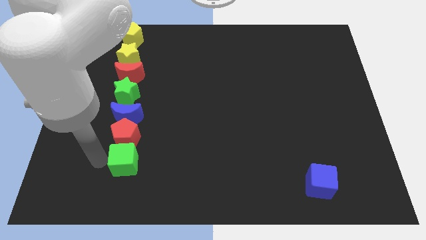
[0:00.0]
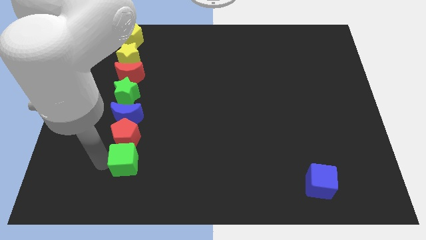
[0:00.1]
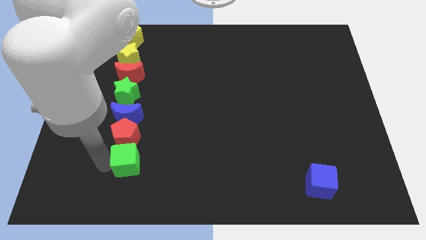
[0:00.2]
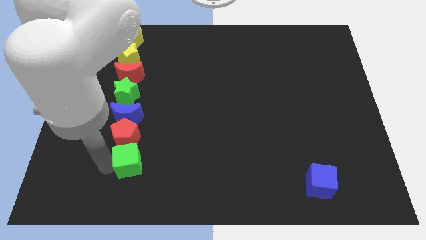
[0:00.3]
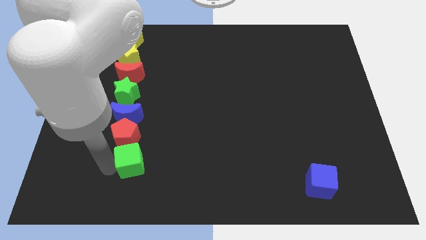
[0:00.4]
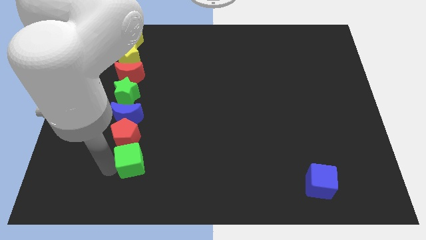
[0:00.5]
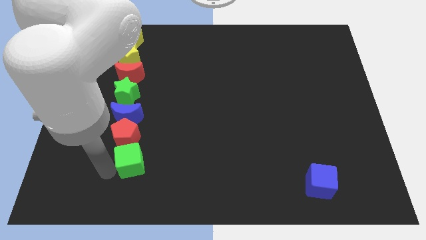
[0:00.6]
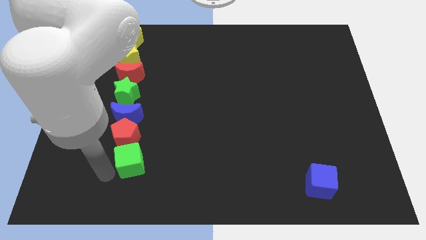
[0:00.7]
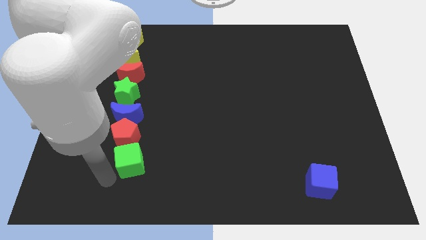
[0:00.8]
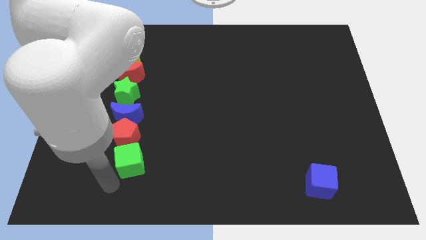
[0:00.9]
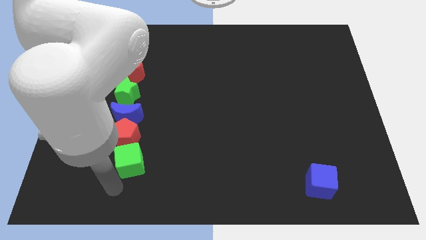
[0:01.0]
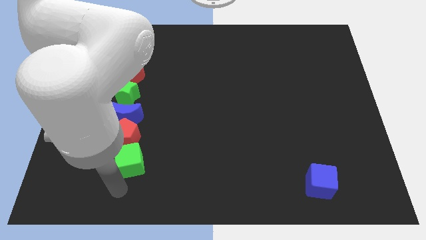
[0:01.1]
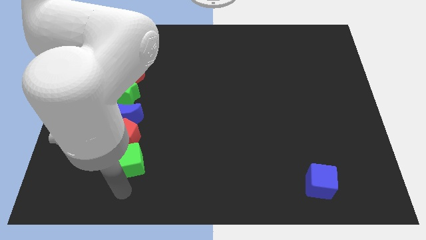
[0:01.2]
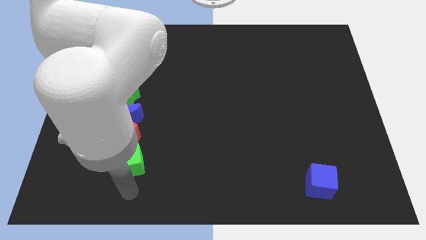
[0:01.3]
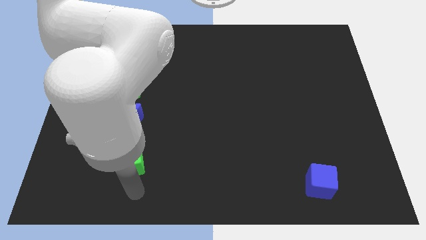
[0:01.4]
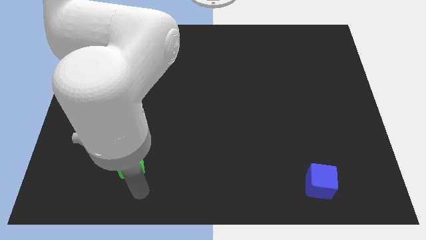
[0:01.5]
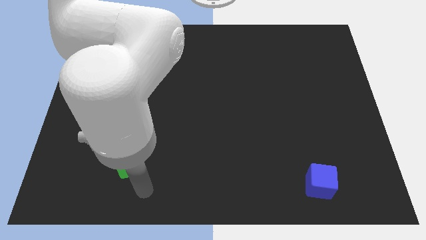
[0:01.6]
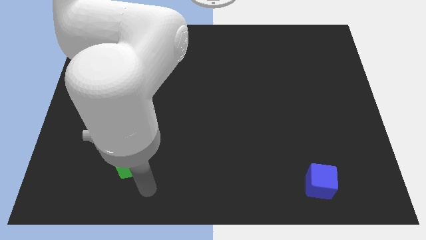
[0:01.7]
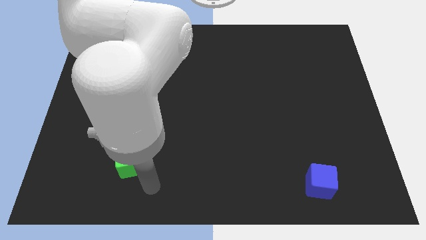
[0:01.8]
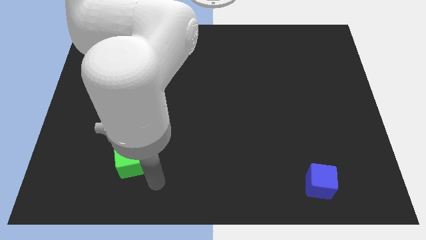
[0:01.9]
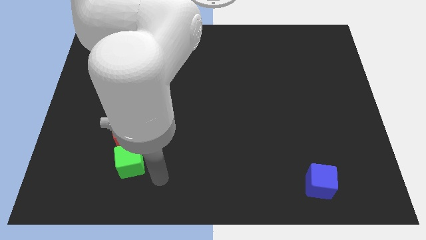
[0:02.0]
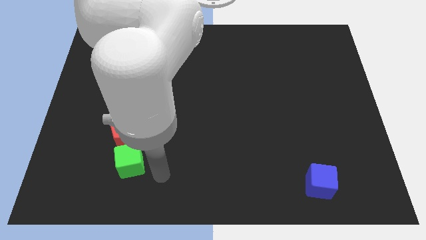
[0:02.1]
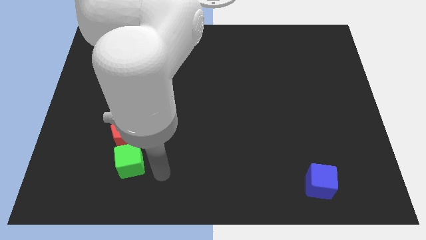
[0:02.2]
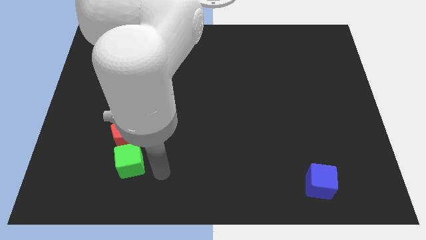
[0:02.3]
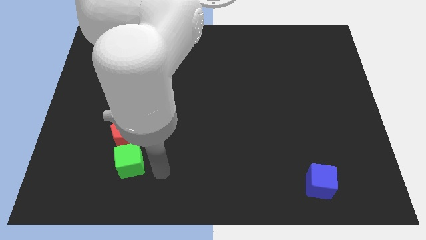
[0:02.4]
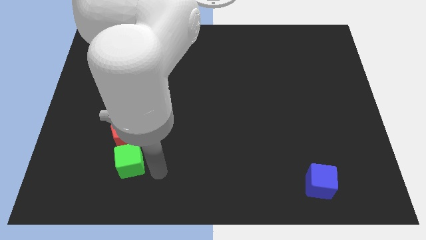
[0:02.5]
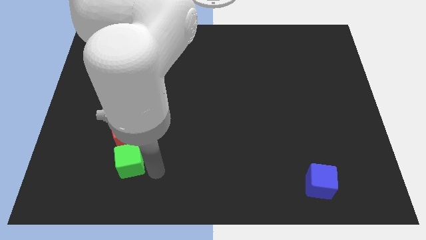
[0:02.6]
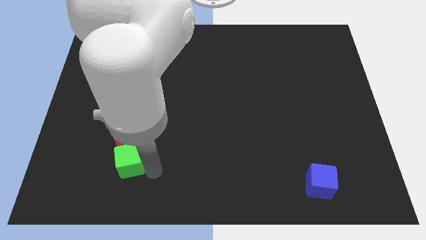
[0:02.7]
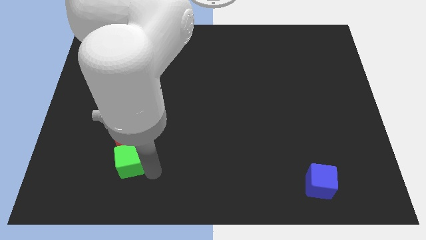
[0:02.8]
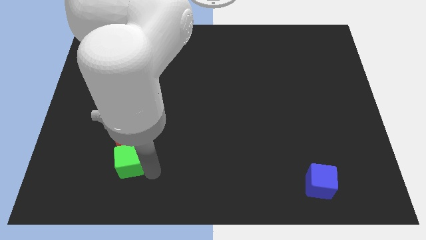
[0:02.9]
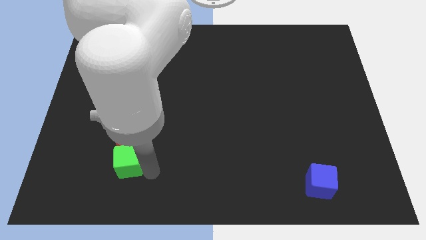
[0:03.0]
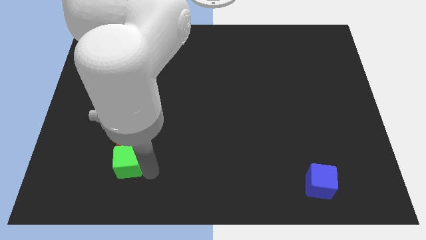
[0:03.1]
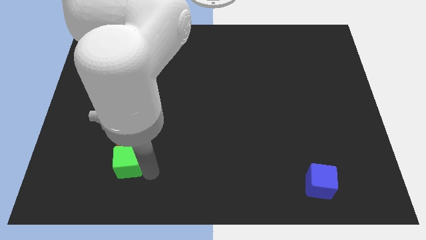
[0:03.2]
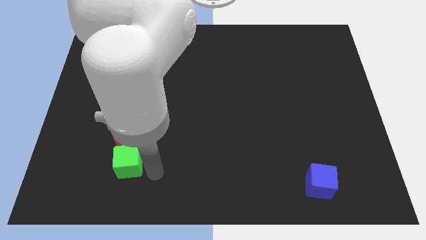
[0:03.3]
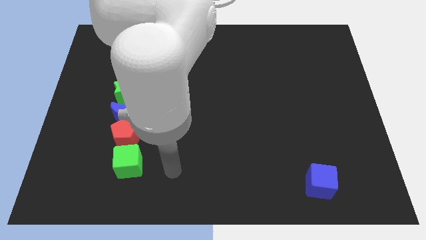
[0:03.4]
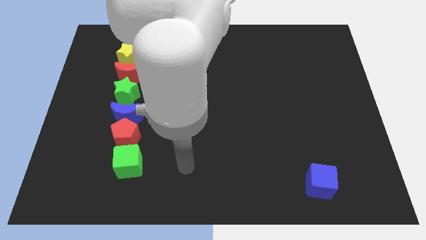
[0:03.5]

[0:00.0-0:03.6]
adjust the green cube at the bottom side of the red pentagon

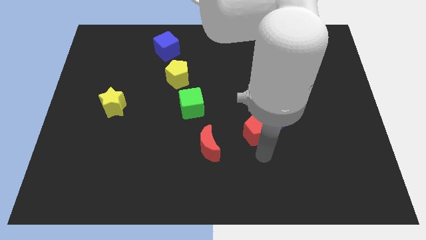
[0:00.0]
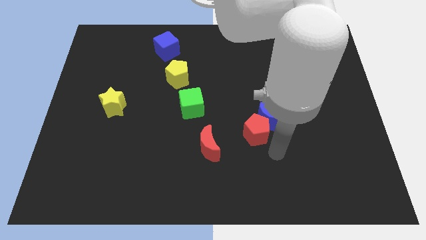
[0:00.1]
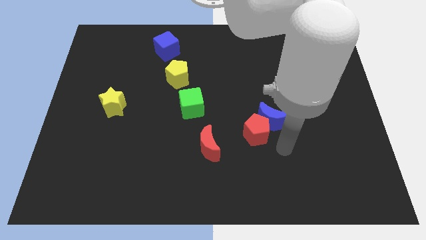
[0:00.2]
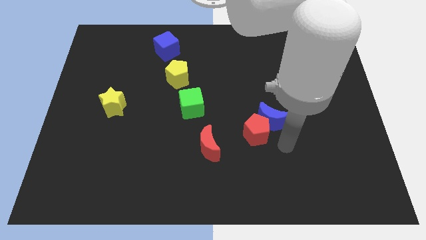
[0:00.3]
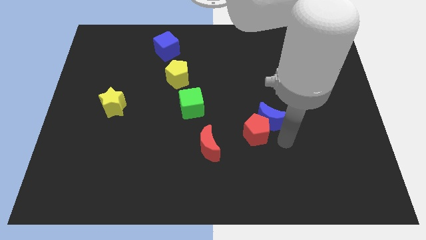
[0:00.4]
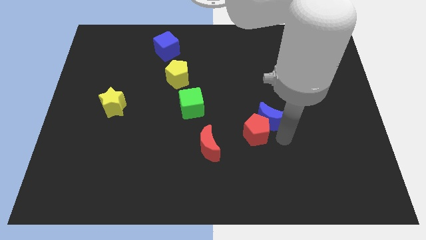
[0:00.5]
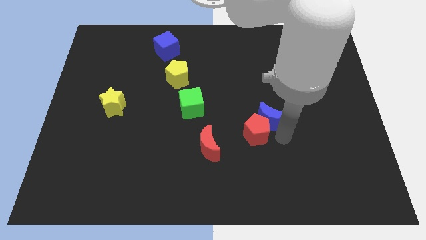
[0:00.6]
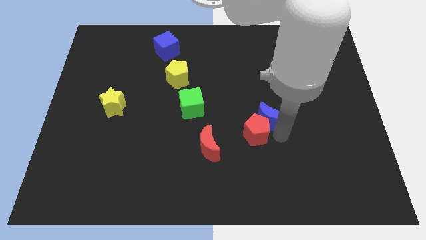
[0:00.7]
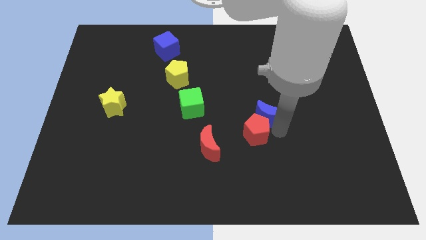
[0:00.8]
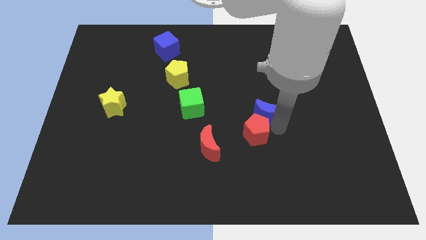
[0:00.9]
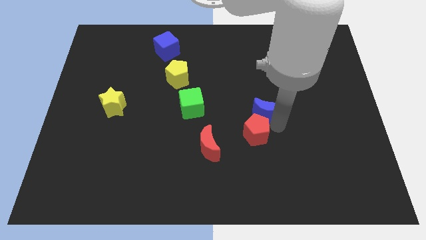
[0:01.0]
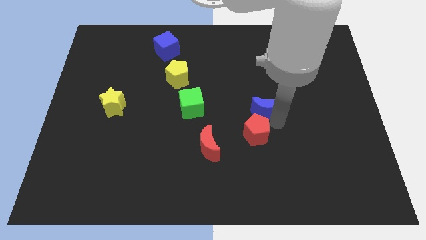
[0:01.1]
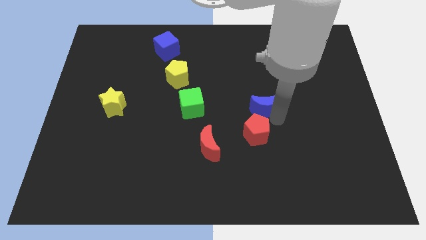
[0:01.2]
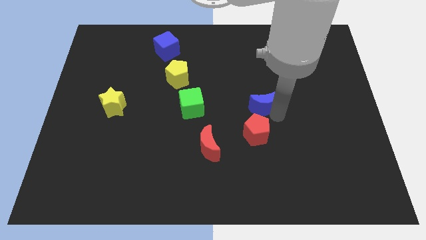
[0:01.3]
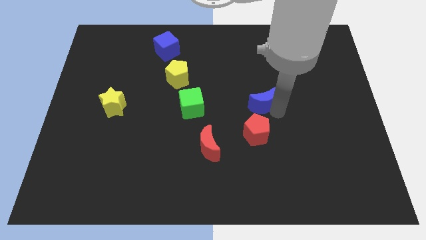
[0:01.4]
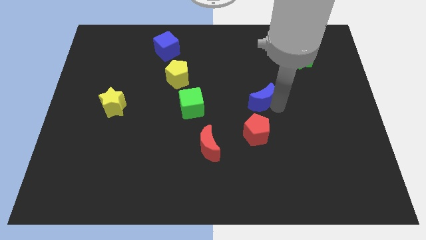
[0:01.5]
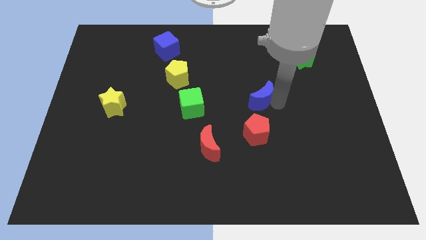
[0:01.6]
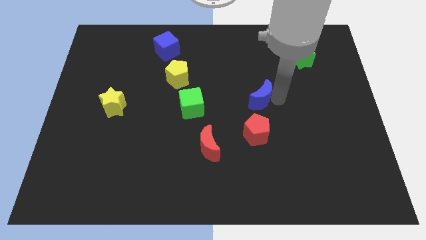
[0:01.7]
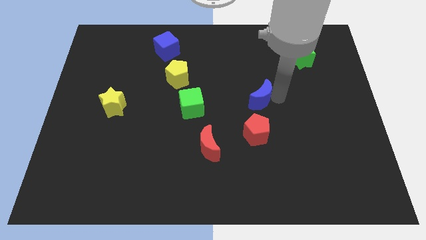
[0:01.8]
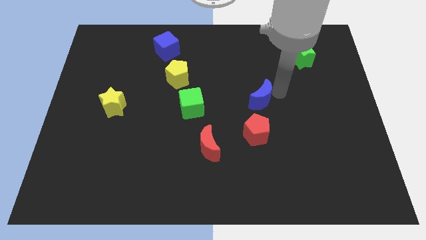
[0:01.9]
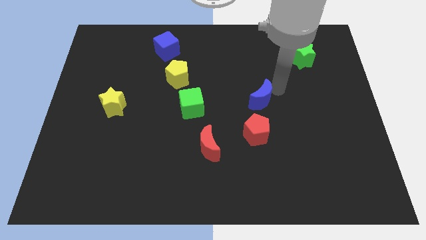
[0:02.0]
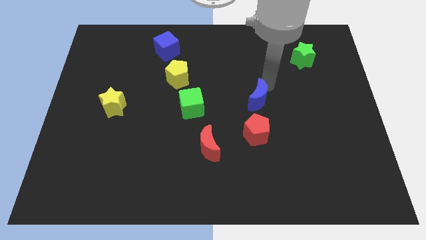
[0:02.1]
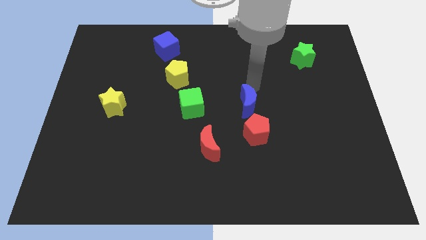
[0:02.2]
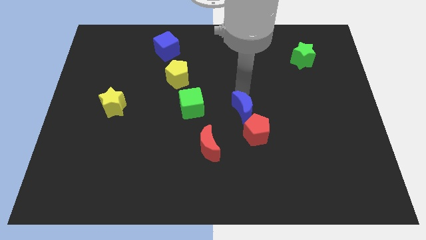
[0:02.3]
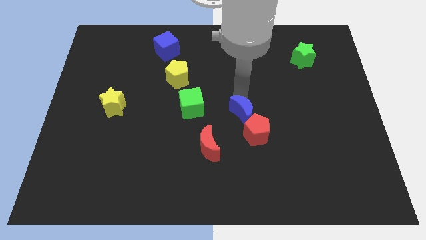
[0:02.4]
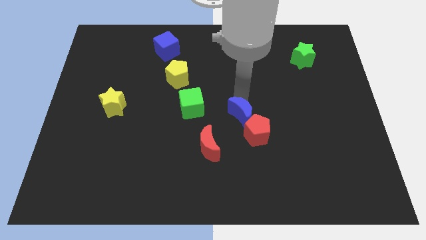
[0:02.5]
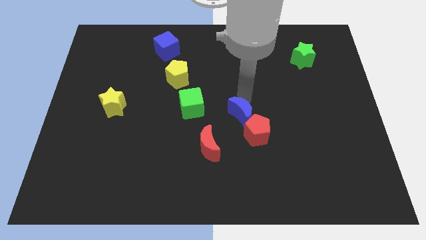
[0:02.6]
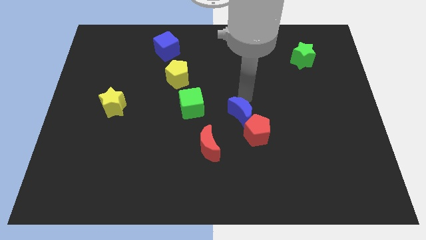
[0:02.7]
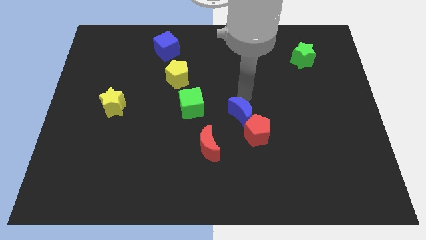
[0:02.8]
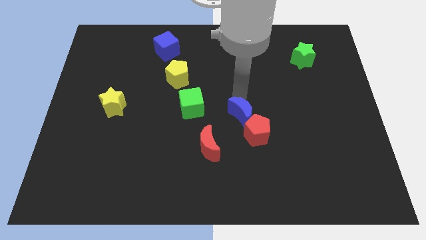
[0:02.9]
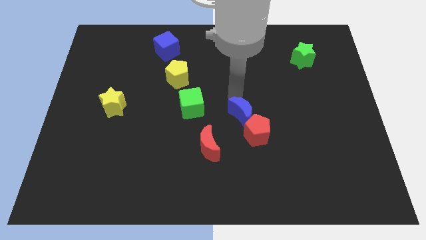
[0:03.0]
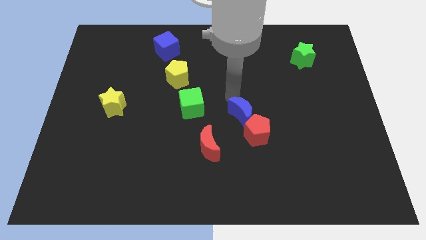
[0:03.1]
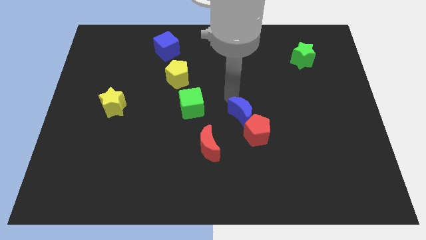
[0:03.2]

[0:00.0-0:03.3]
place the blue crescent at the top of red pentagon

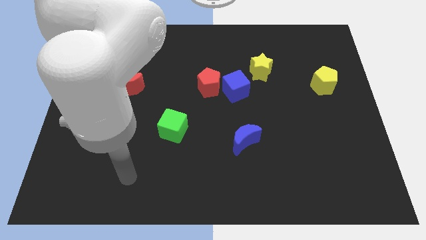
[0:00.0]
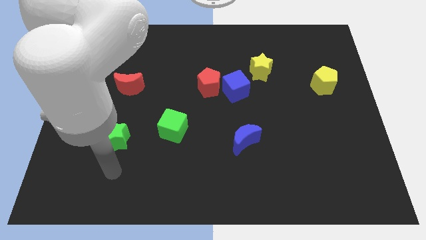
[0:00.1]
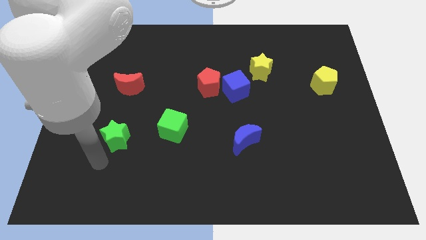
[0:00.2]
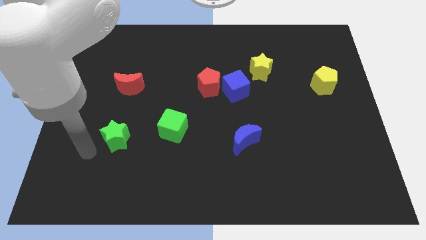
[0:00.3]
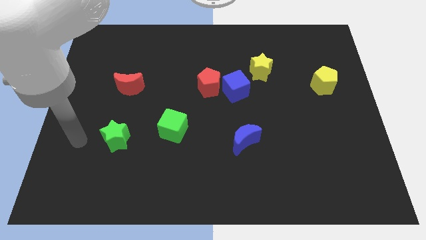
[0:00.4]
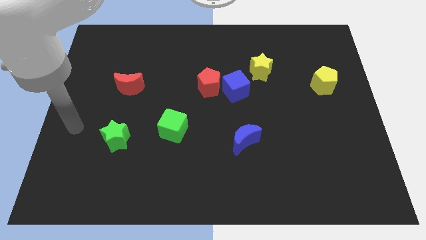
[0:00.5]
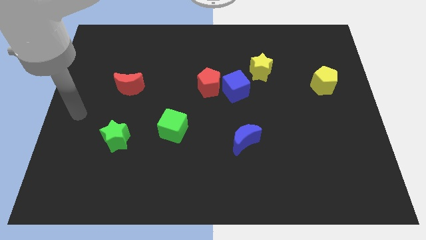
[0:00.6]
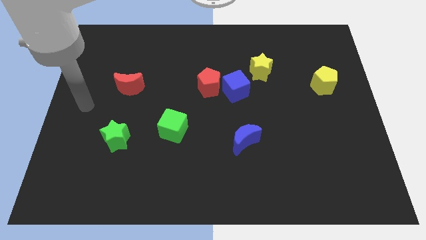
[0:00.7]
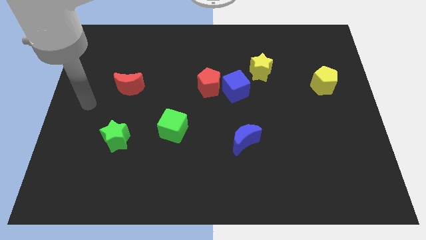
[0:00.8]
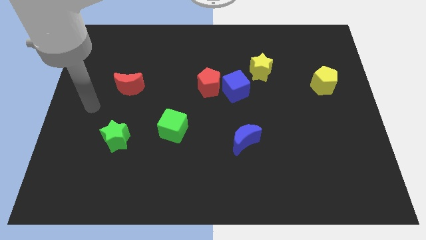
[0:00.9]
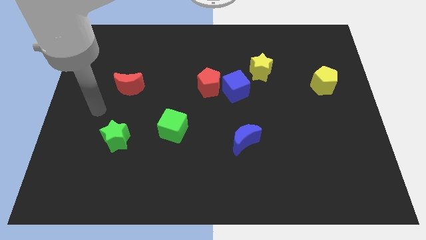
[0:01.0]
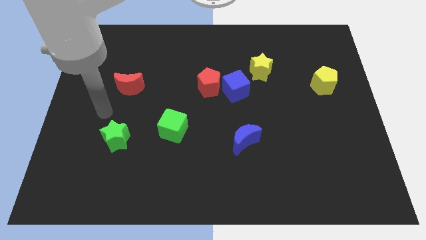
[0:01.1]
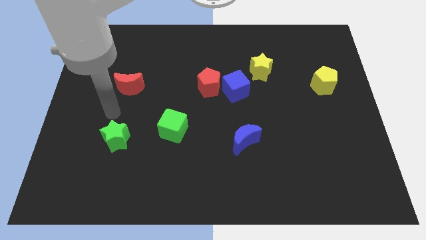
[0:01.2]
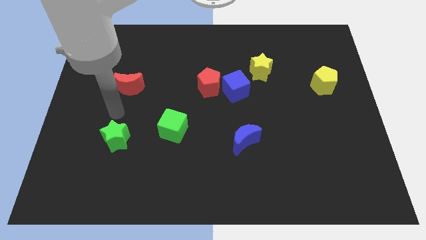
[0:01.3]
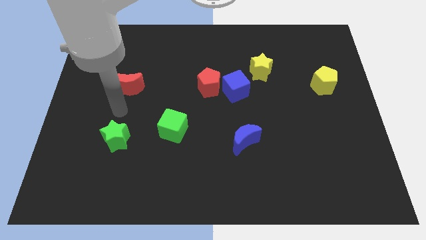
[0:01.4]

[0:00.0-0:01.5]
place your arm in between the red moon and green star

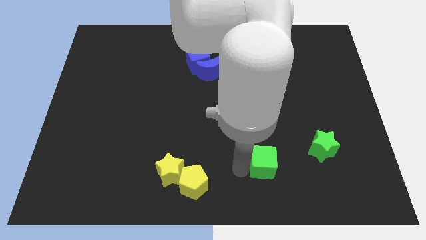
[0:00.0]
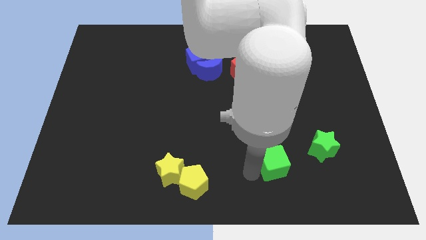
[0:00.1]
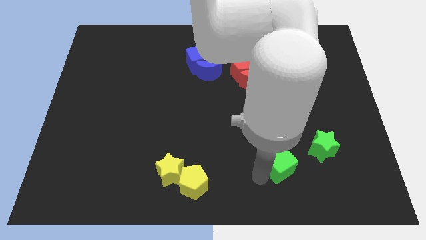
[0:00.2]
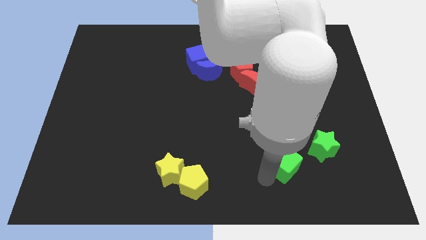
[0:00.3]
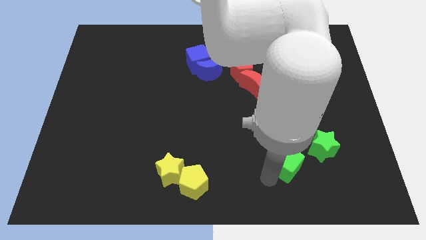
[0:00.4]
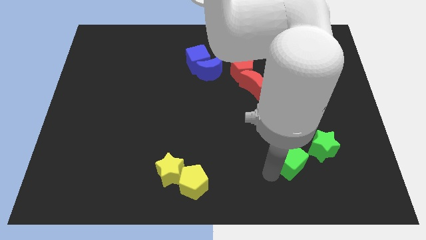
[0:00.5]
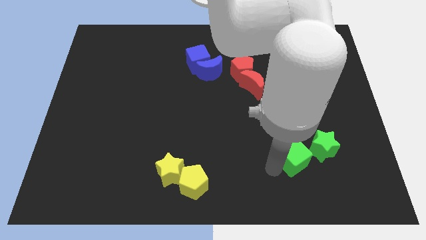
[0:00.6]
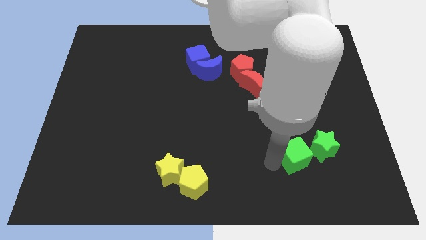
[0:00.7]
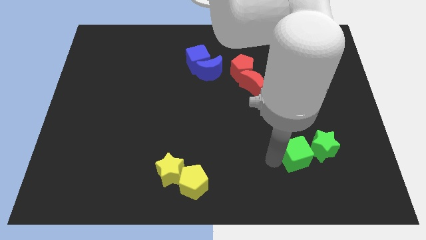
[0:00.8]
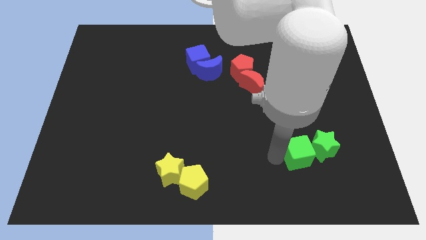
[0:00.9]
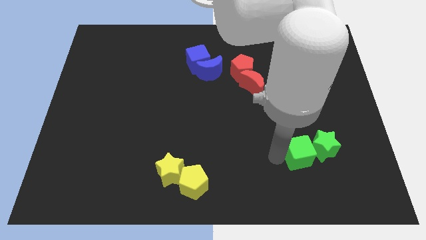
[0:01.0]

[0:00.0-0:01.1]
push the green cube into the green star
